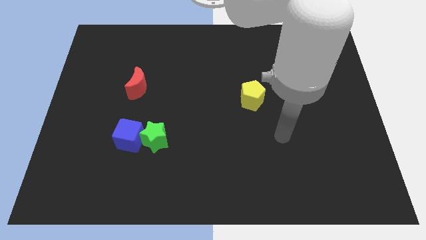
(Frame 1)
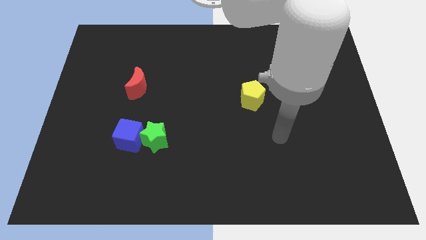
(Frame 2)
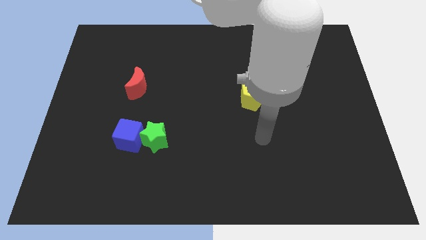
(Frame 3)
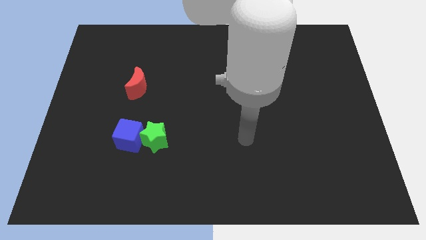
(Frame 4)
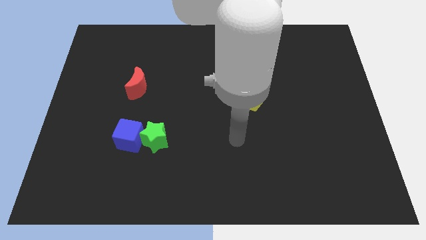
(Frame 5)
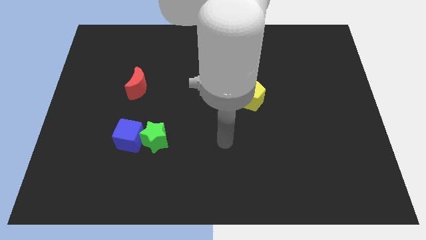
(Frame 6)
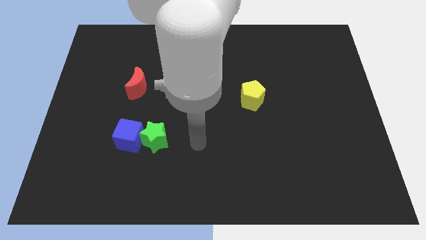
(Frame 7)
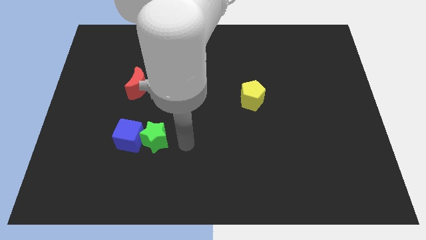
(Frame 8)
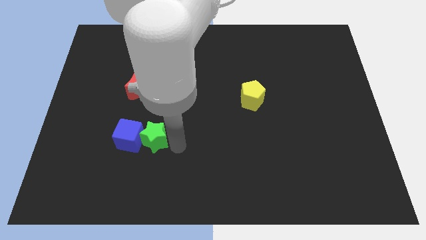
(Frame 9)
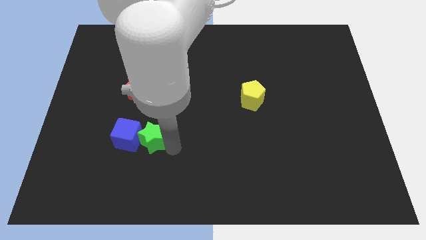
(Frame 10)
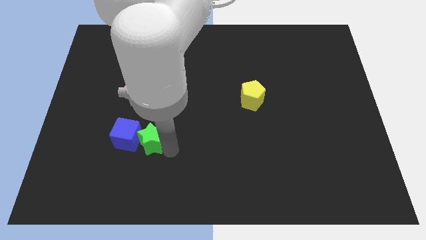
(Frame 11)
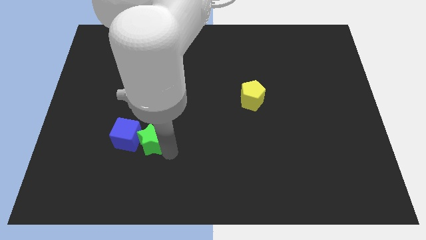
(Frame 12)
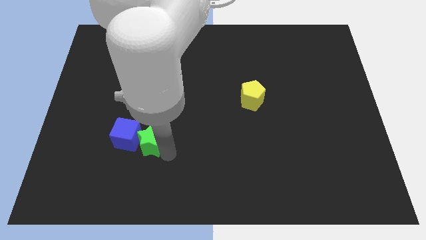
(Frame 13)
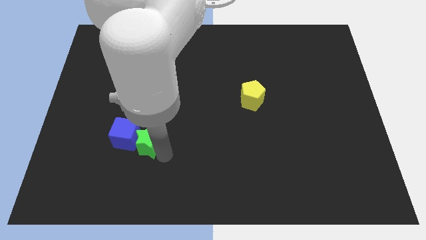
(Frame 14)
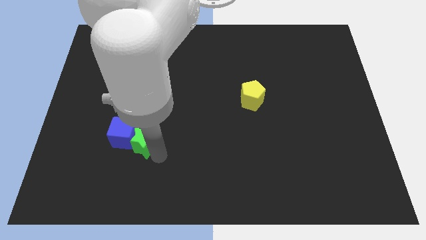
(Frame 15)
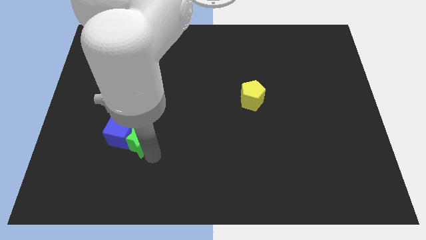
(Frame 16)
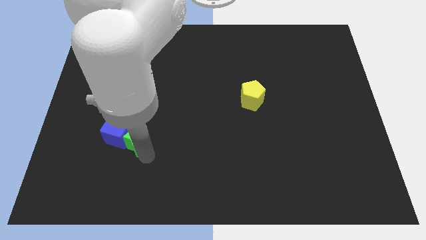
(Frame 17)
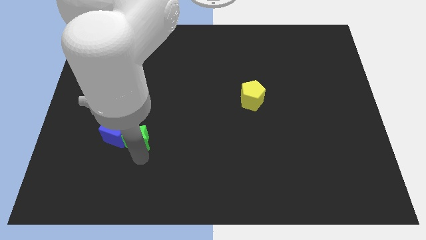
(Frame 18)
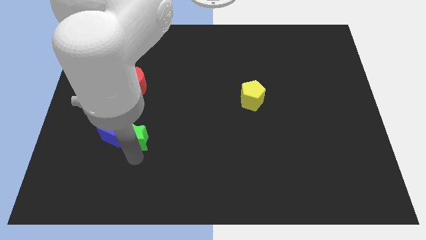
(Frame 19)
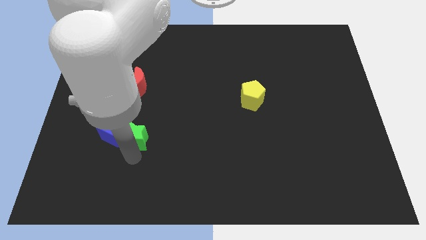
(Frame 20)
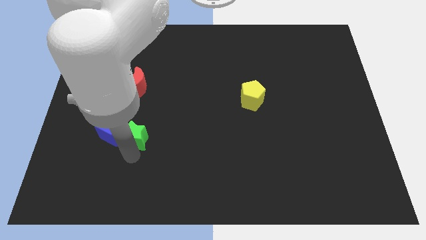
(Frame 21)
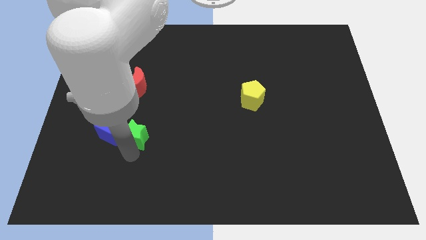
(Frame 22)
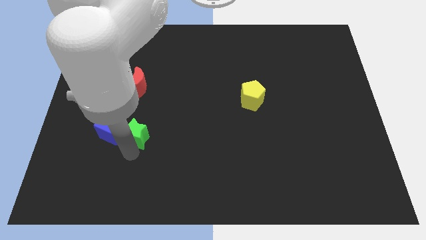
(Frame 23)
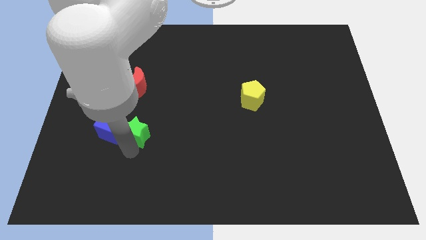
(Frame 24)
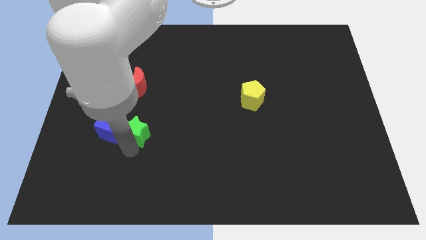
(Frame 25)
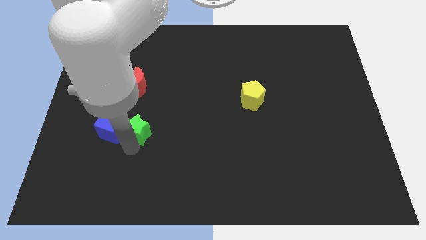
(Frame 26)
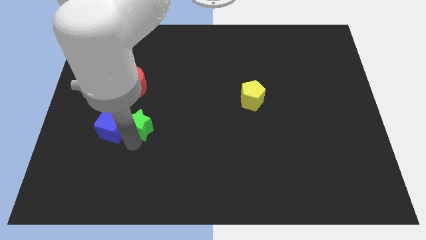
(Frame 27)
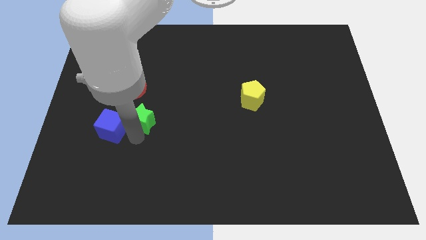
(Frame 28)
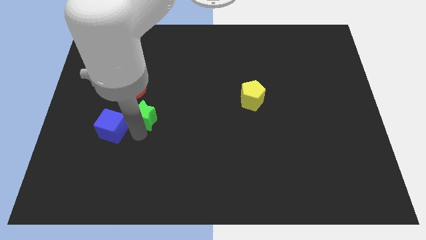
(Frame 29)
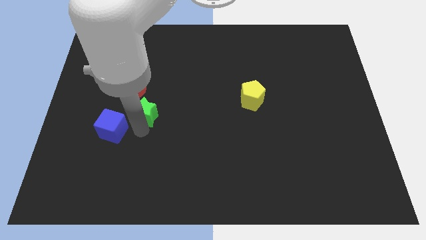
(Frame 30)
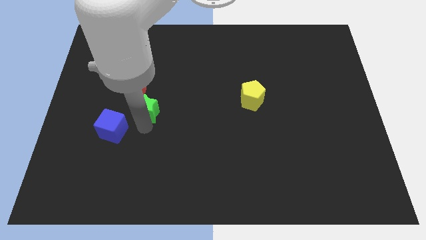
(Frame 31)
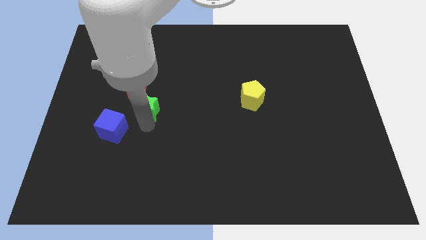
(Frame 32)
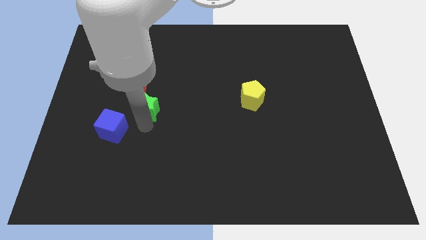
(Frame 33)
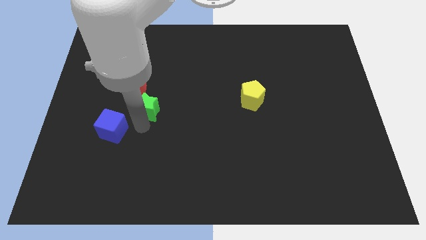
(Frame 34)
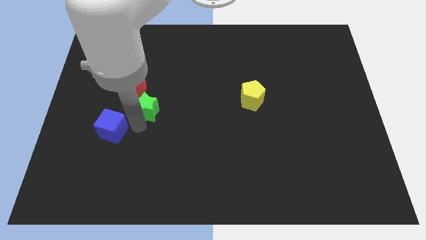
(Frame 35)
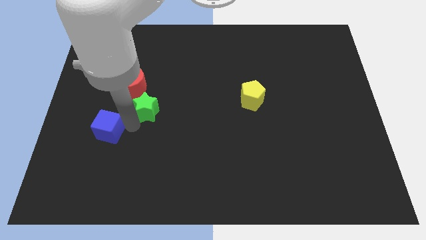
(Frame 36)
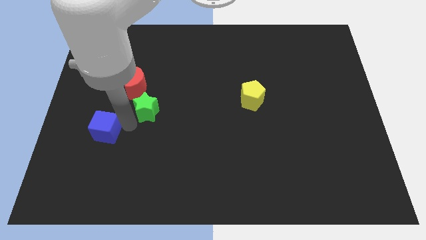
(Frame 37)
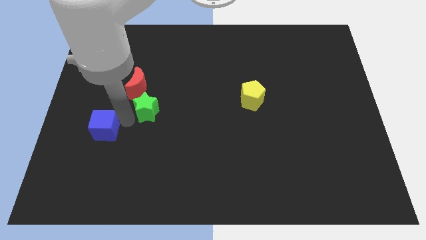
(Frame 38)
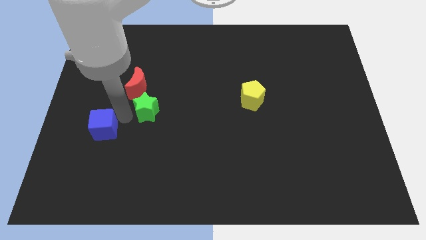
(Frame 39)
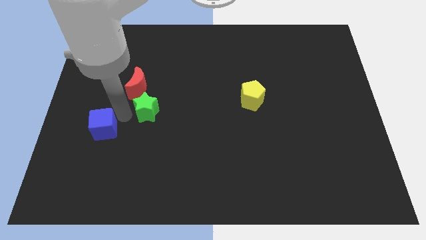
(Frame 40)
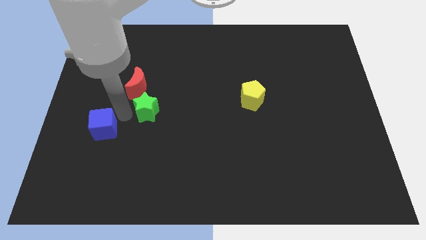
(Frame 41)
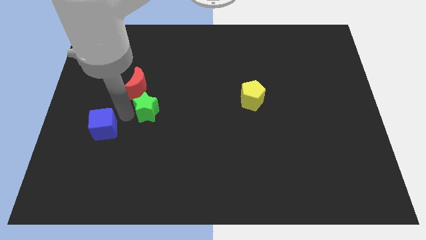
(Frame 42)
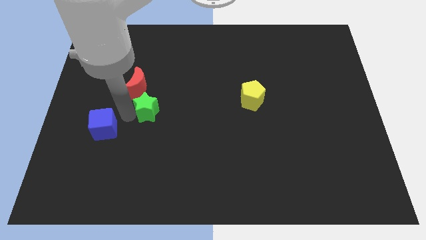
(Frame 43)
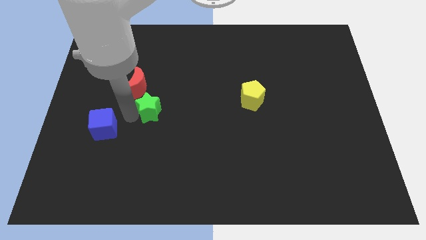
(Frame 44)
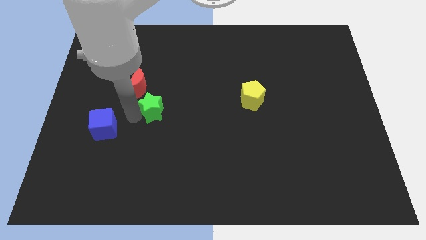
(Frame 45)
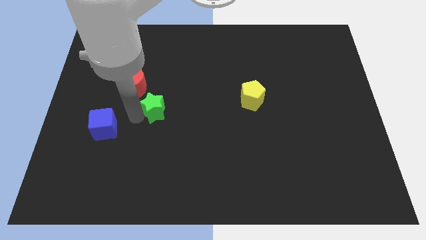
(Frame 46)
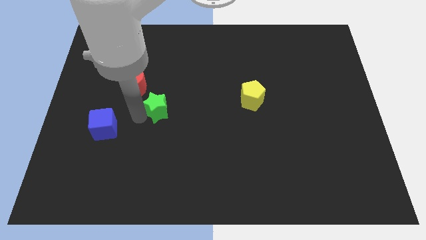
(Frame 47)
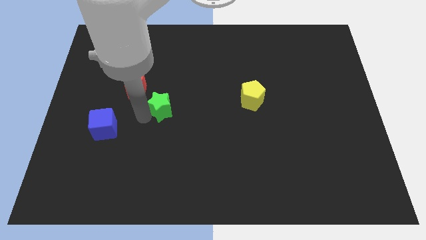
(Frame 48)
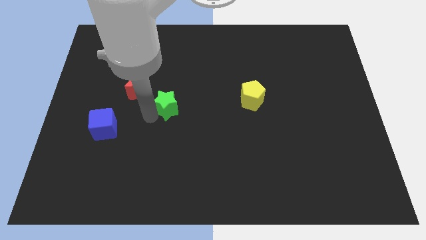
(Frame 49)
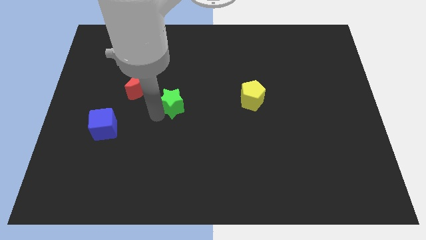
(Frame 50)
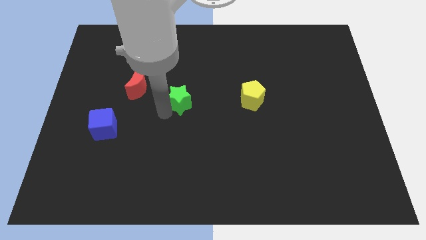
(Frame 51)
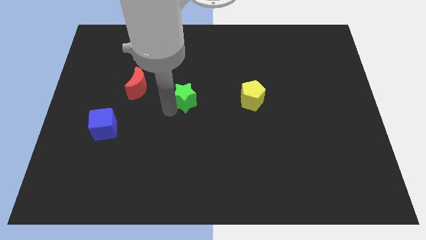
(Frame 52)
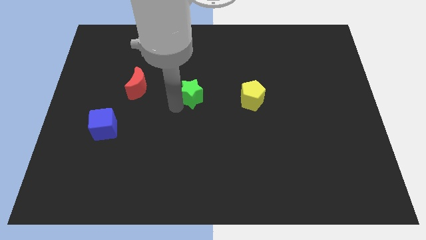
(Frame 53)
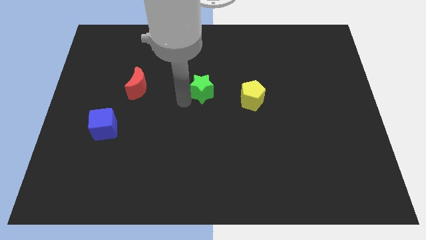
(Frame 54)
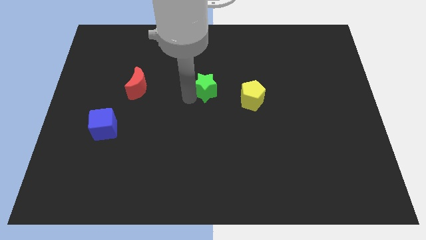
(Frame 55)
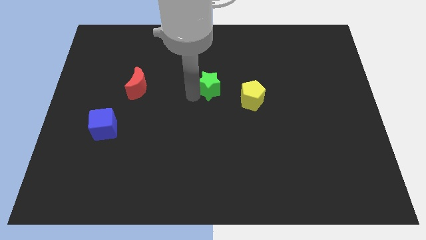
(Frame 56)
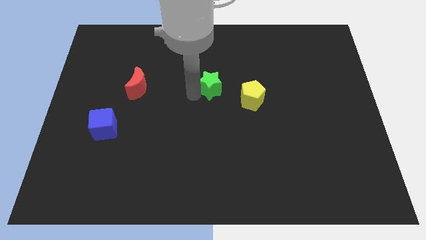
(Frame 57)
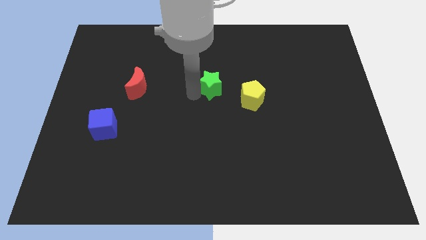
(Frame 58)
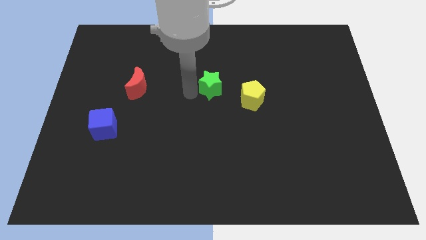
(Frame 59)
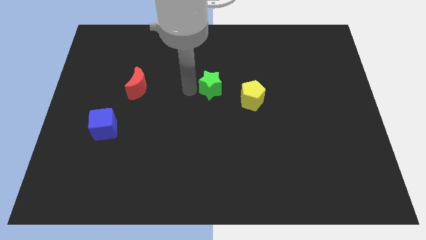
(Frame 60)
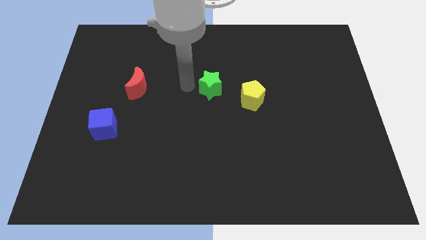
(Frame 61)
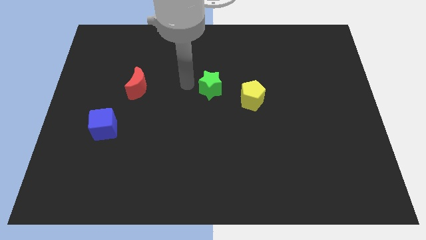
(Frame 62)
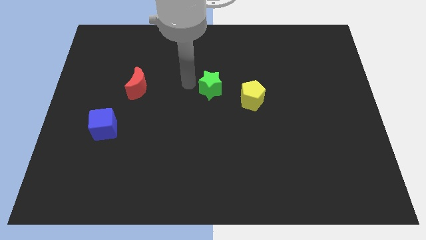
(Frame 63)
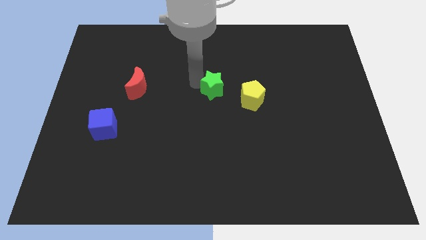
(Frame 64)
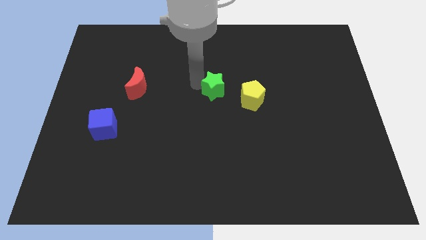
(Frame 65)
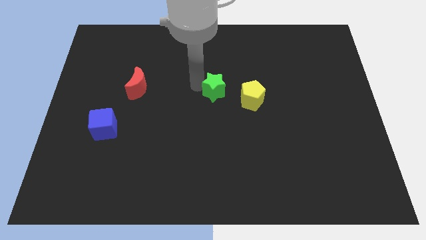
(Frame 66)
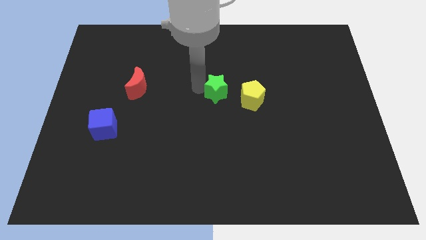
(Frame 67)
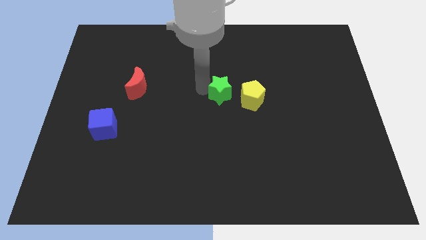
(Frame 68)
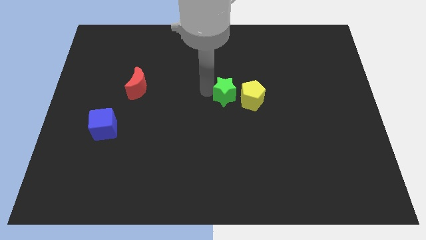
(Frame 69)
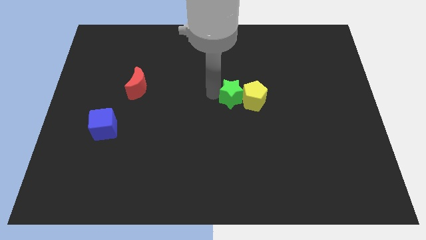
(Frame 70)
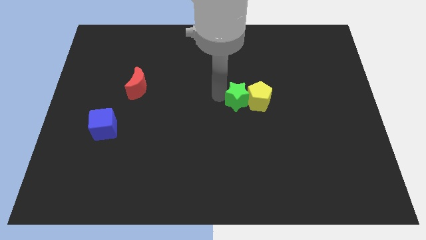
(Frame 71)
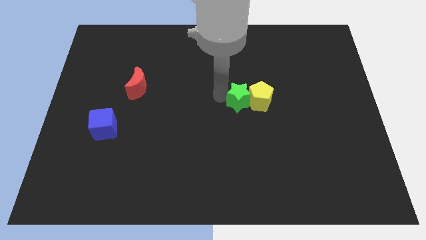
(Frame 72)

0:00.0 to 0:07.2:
slide the green star to the yellow pentagon

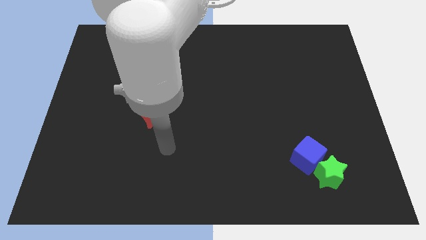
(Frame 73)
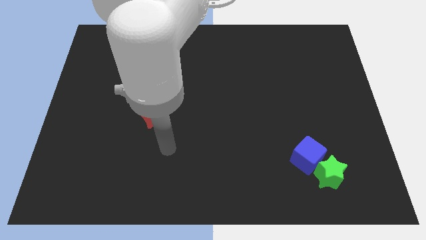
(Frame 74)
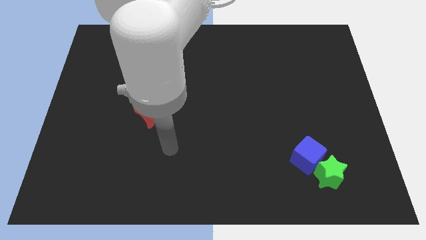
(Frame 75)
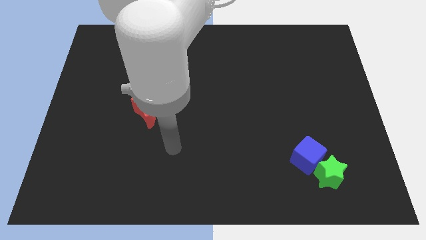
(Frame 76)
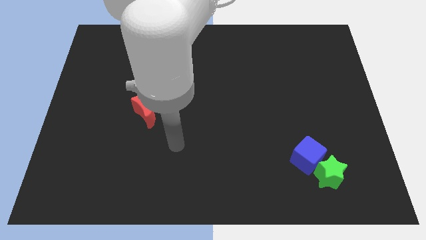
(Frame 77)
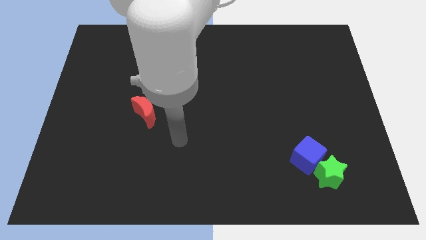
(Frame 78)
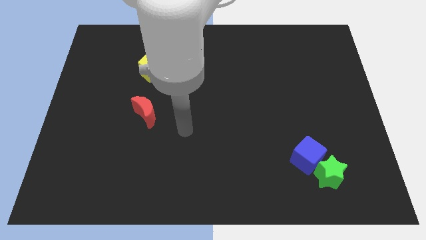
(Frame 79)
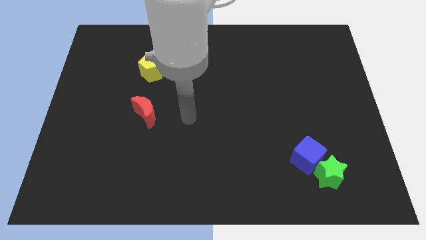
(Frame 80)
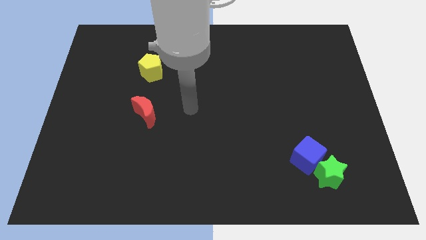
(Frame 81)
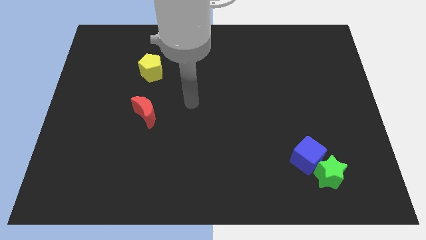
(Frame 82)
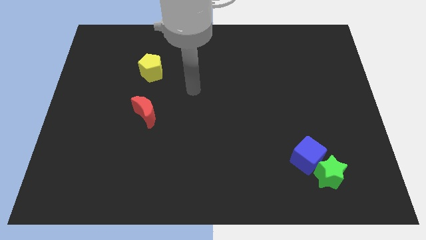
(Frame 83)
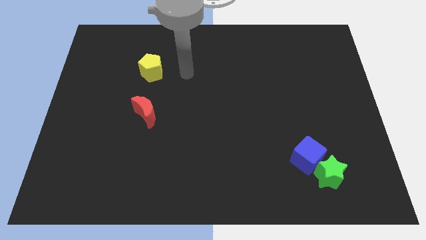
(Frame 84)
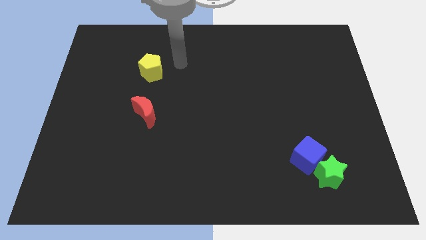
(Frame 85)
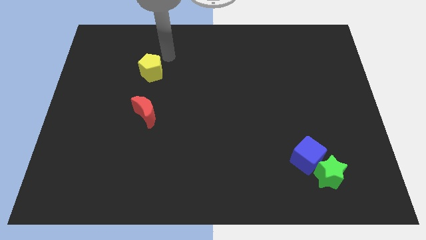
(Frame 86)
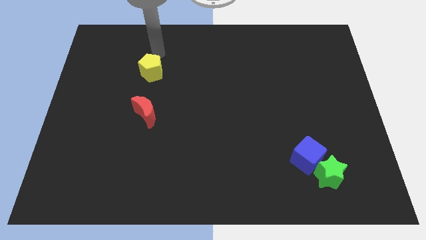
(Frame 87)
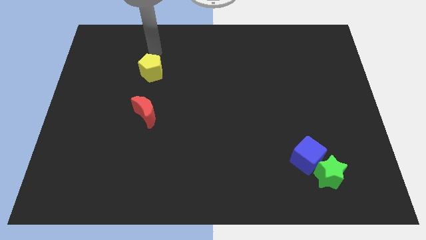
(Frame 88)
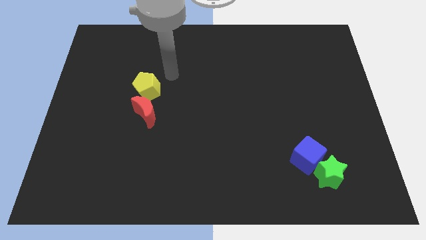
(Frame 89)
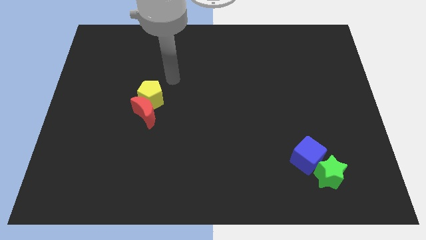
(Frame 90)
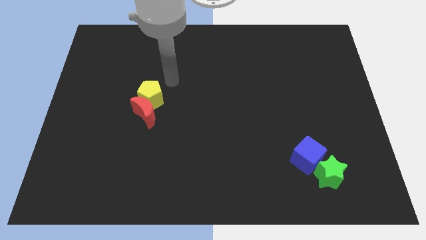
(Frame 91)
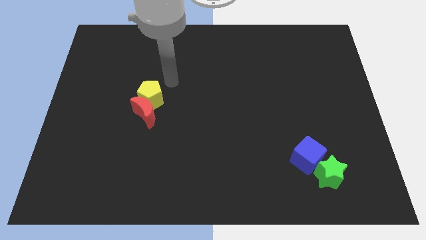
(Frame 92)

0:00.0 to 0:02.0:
put the pentagon close to the red block
